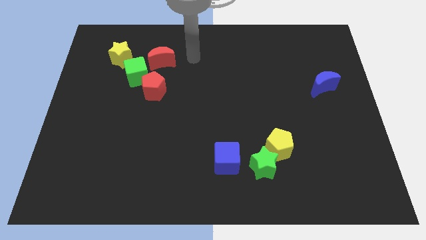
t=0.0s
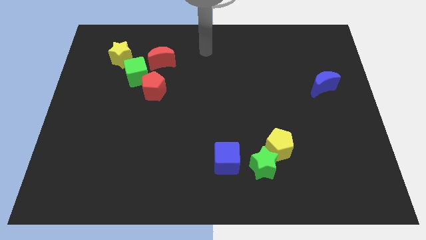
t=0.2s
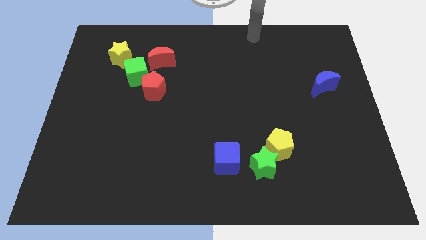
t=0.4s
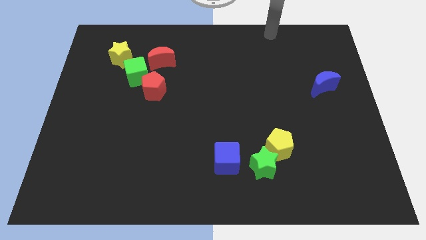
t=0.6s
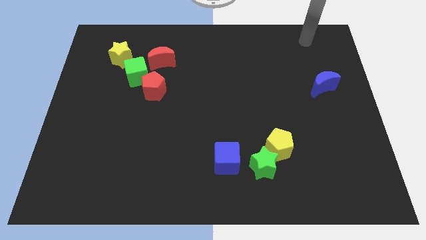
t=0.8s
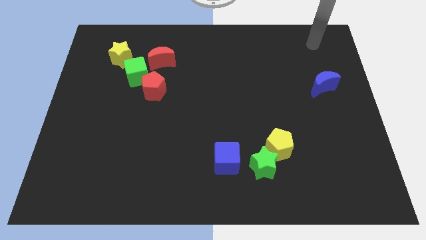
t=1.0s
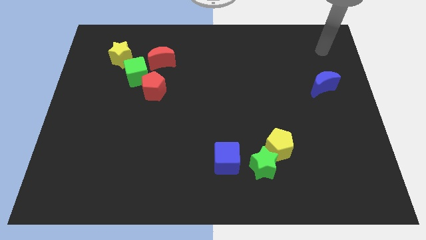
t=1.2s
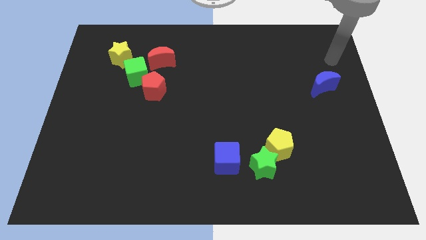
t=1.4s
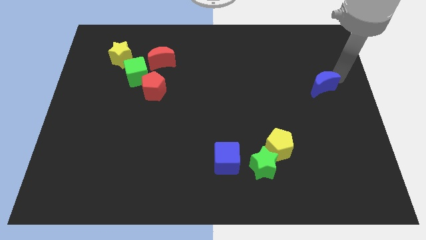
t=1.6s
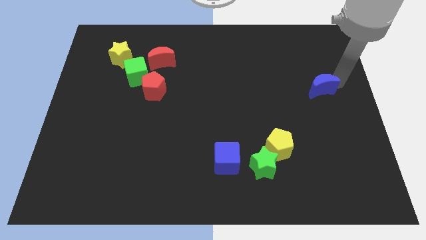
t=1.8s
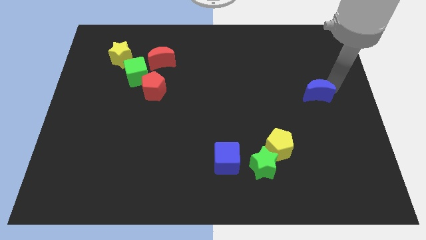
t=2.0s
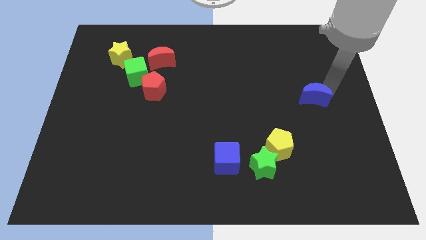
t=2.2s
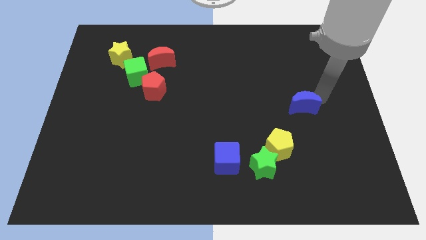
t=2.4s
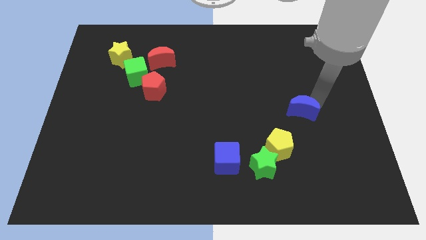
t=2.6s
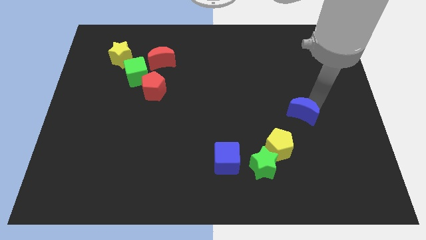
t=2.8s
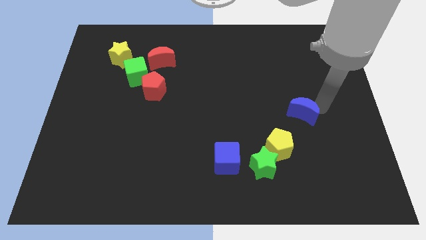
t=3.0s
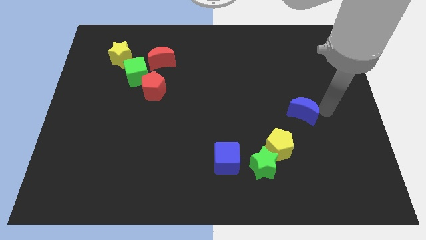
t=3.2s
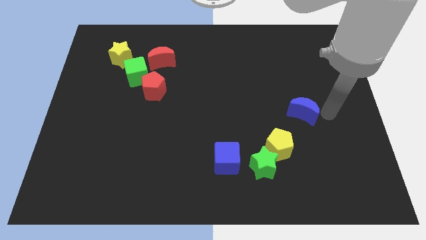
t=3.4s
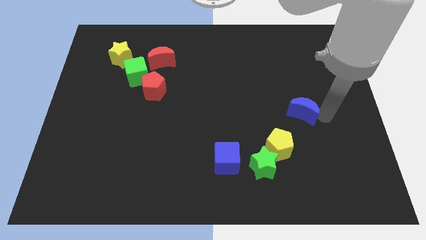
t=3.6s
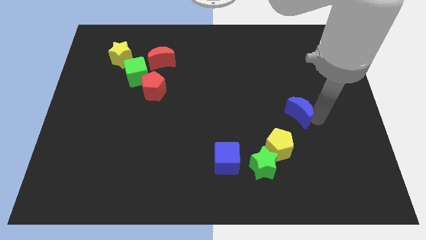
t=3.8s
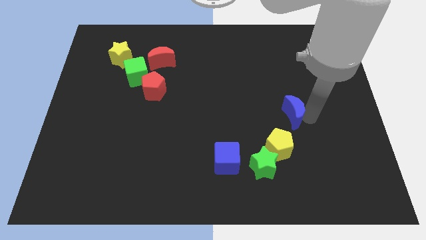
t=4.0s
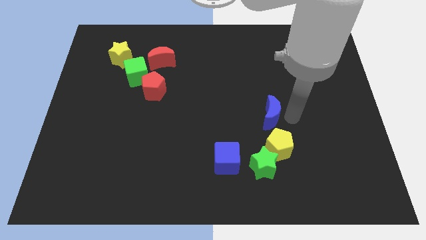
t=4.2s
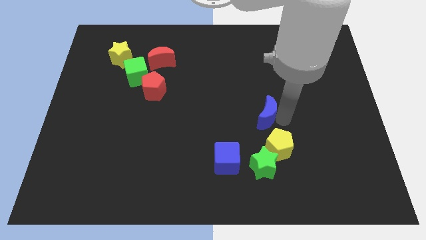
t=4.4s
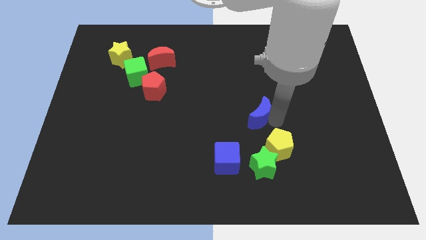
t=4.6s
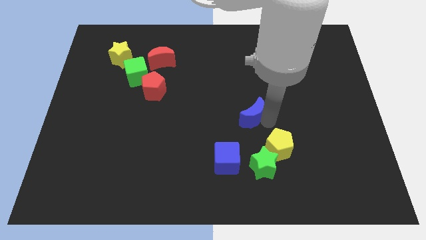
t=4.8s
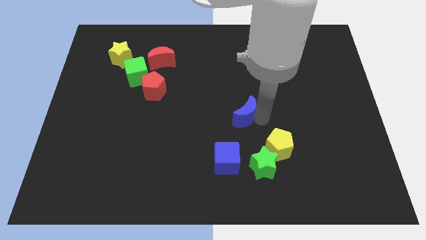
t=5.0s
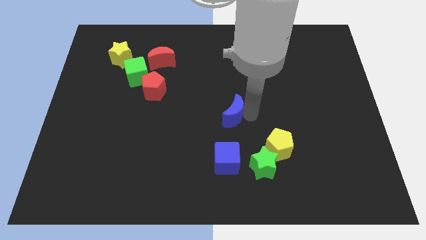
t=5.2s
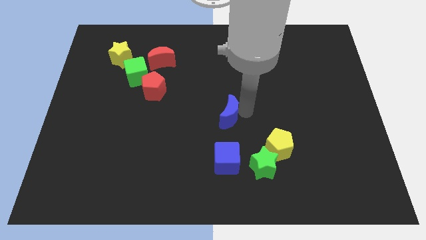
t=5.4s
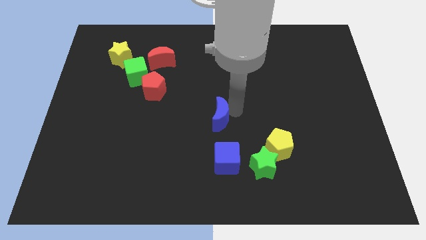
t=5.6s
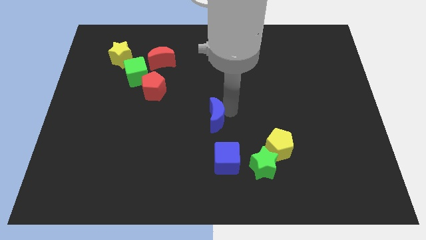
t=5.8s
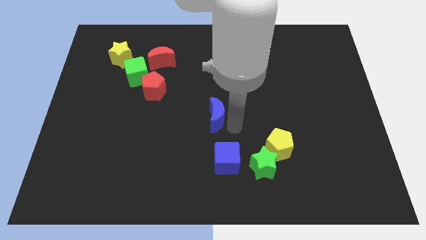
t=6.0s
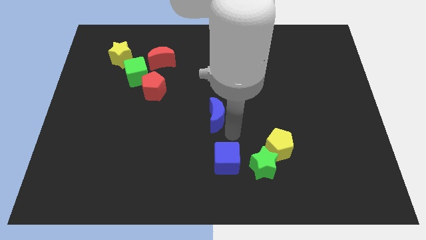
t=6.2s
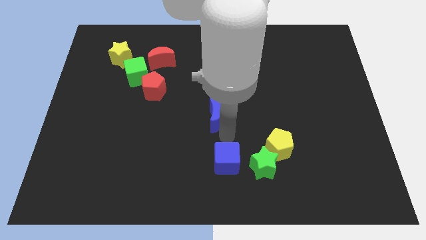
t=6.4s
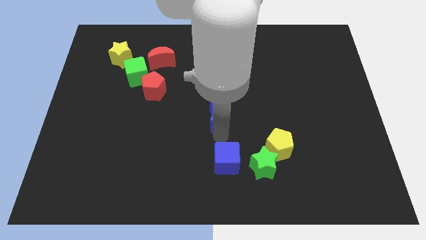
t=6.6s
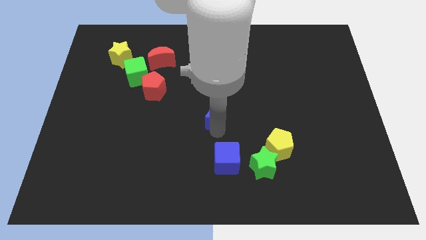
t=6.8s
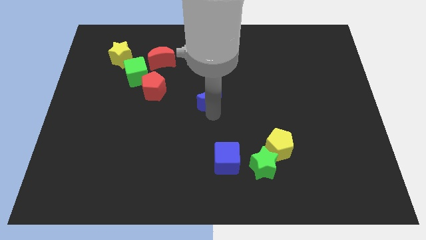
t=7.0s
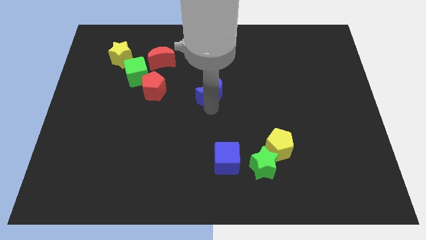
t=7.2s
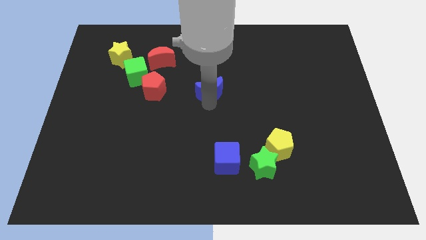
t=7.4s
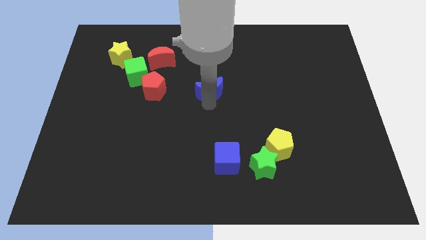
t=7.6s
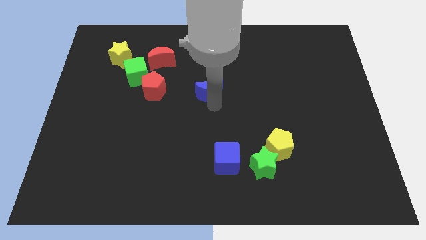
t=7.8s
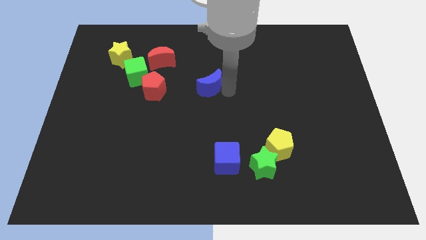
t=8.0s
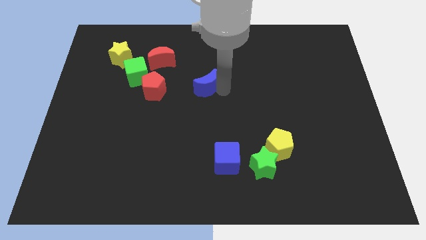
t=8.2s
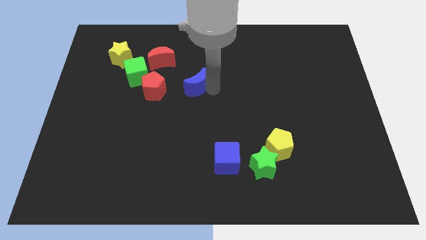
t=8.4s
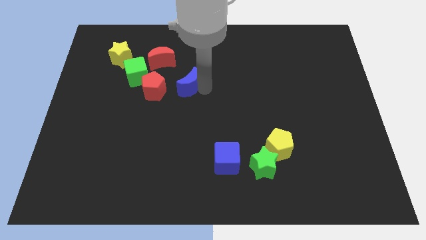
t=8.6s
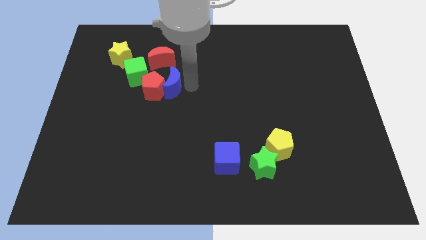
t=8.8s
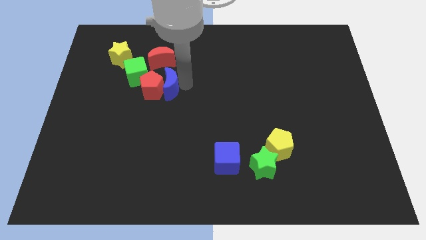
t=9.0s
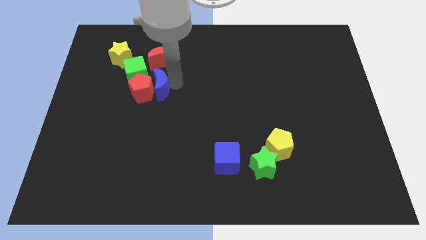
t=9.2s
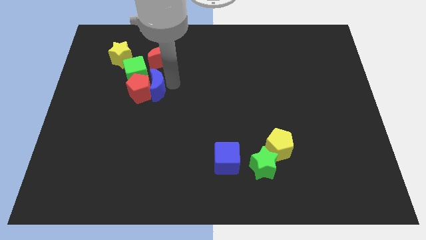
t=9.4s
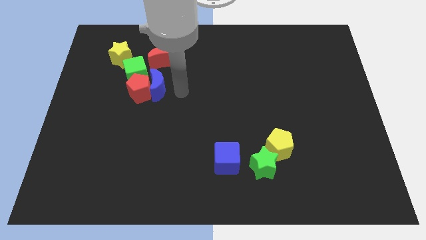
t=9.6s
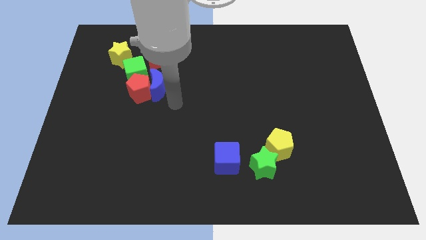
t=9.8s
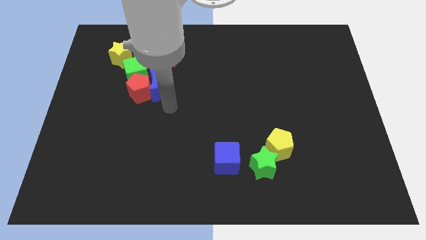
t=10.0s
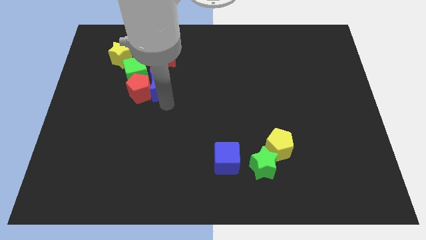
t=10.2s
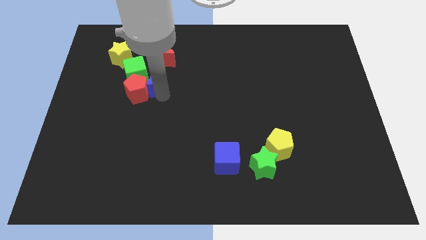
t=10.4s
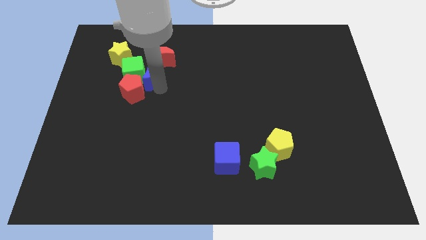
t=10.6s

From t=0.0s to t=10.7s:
put the blue moon next to the green cube

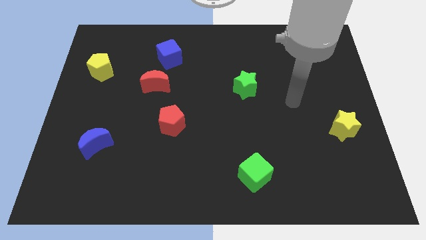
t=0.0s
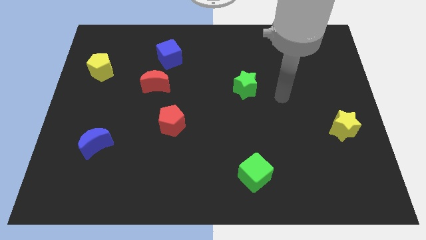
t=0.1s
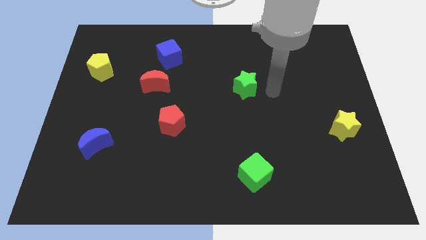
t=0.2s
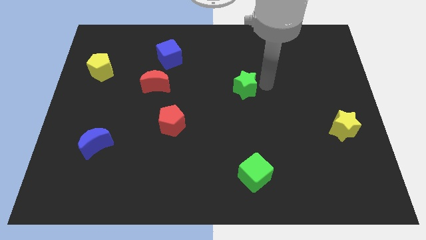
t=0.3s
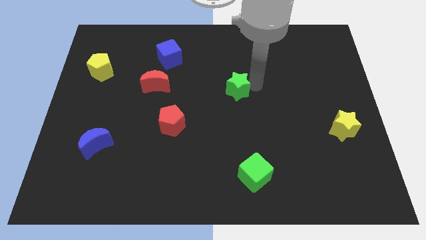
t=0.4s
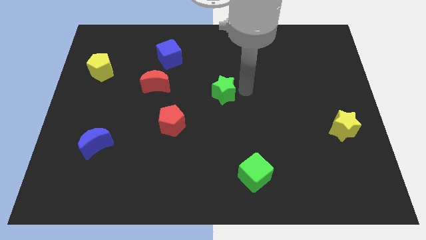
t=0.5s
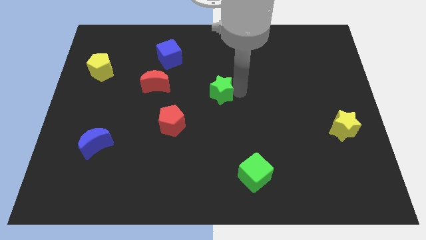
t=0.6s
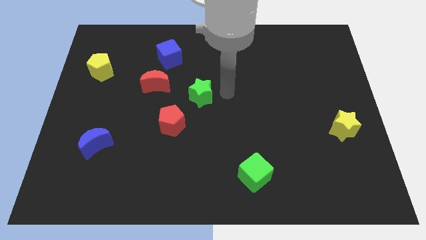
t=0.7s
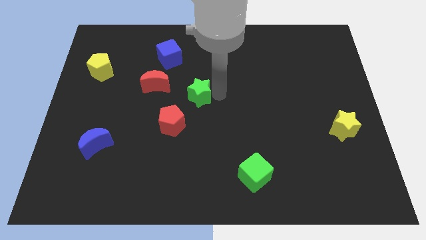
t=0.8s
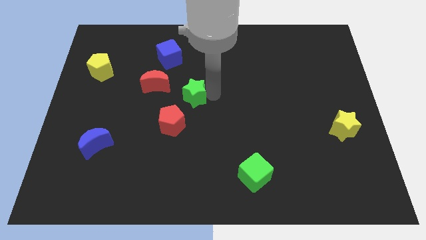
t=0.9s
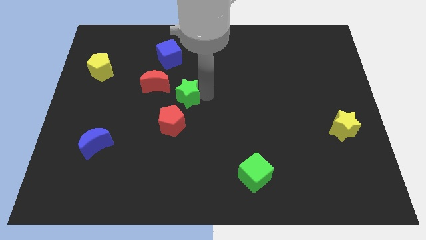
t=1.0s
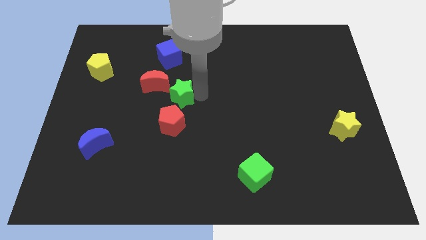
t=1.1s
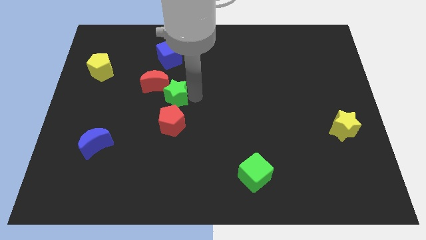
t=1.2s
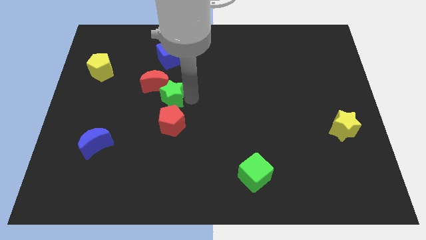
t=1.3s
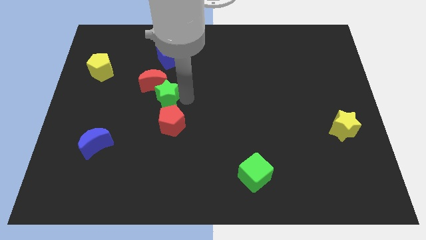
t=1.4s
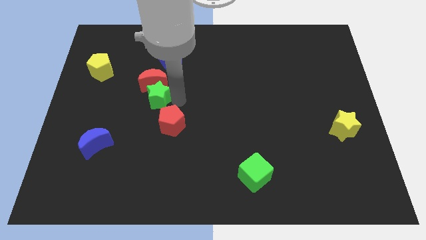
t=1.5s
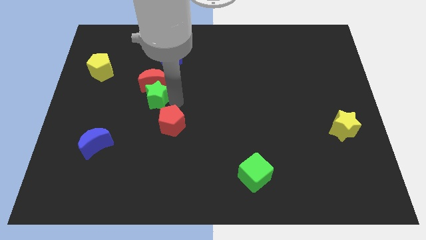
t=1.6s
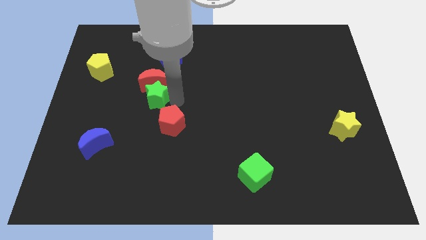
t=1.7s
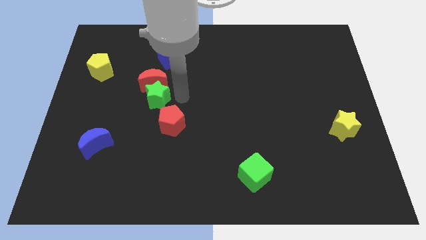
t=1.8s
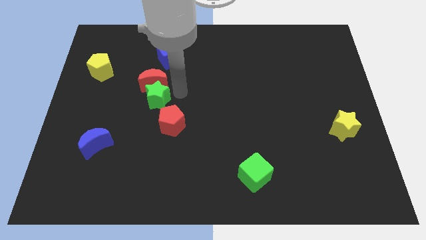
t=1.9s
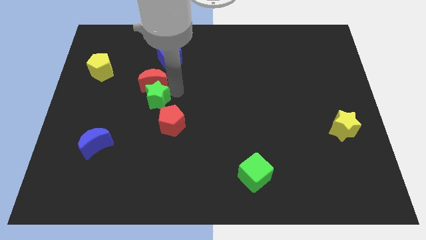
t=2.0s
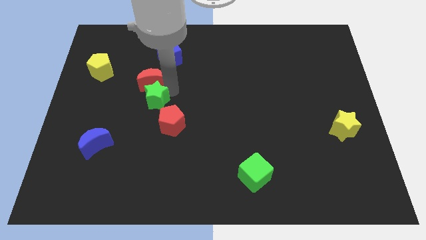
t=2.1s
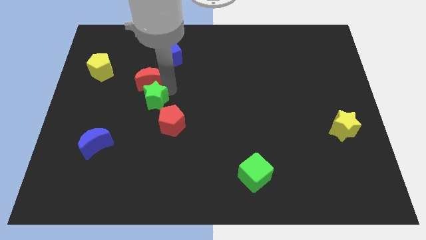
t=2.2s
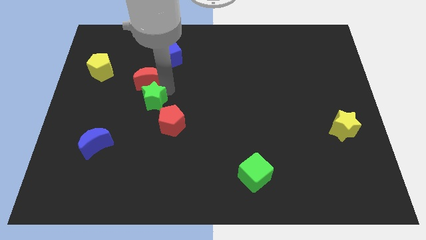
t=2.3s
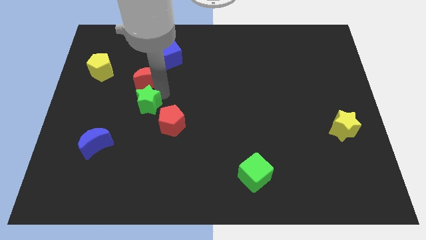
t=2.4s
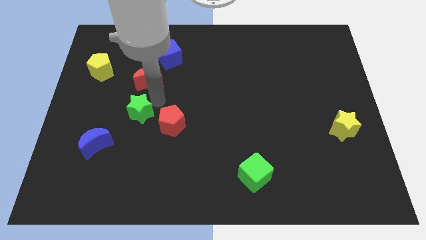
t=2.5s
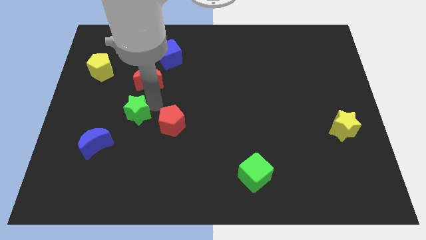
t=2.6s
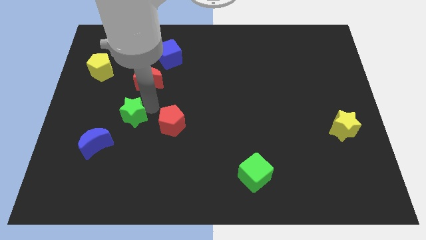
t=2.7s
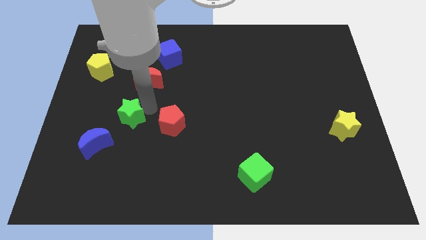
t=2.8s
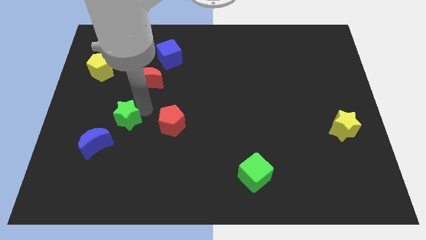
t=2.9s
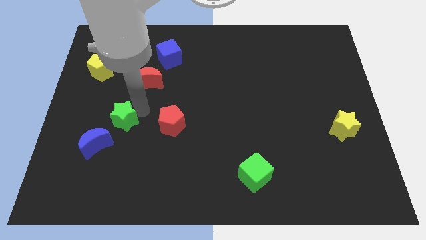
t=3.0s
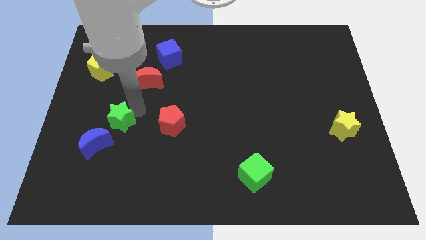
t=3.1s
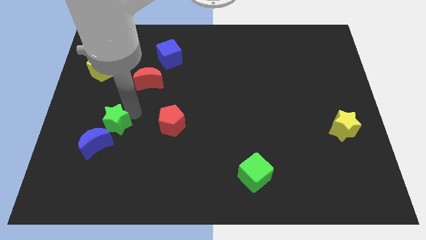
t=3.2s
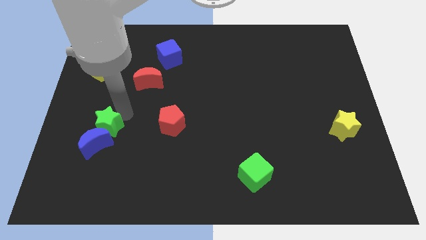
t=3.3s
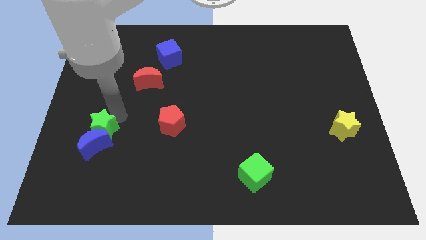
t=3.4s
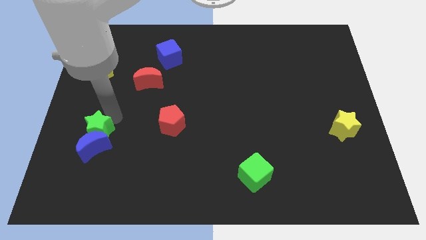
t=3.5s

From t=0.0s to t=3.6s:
push the green star to the blue moon
